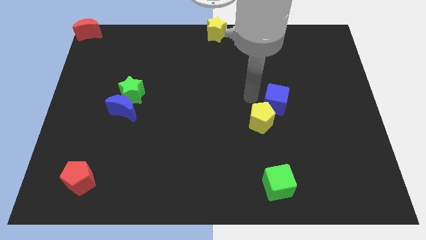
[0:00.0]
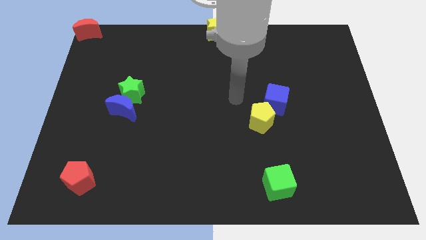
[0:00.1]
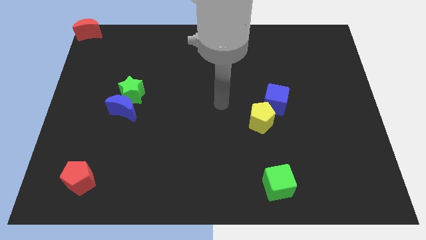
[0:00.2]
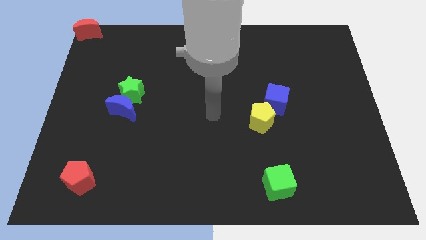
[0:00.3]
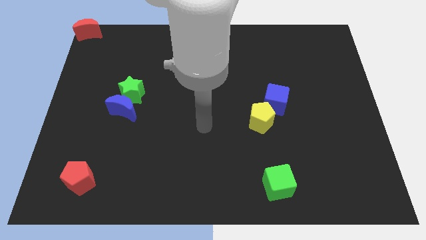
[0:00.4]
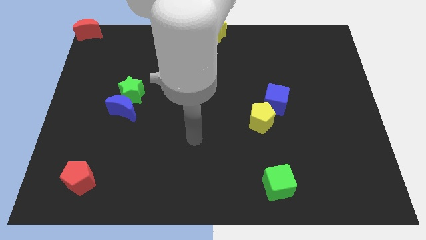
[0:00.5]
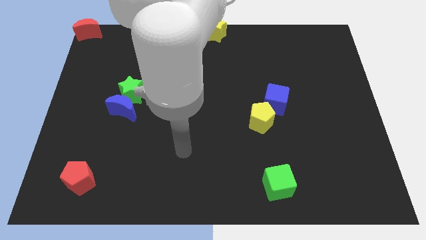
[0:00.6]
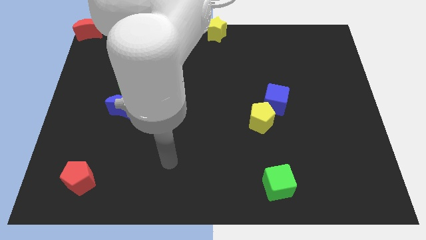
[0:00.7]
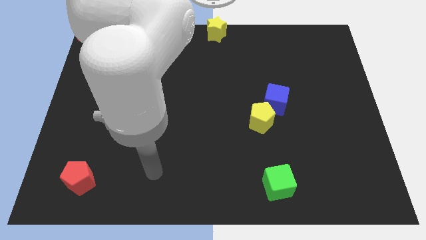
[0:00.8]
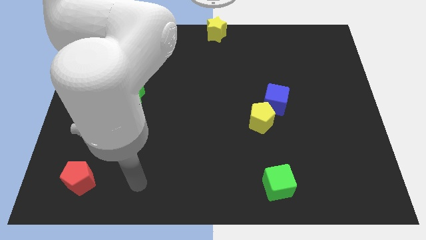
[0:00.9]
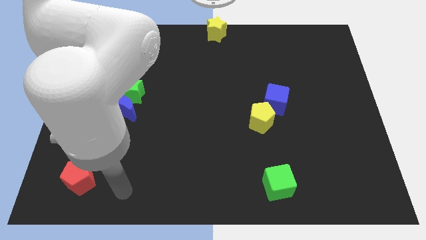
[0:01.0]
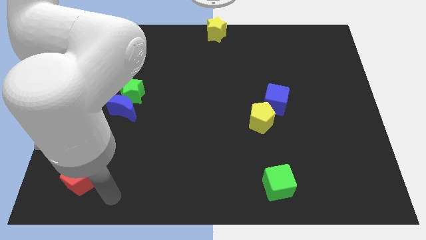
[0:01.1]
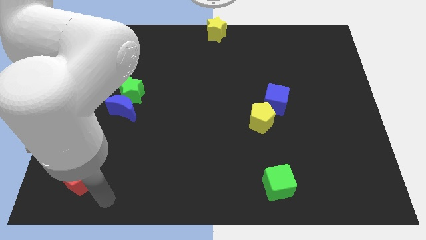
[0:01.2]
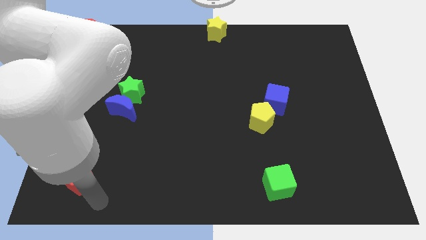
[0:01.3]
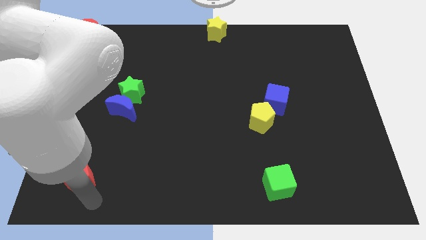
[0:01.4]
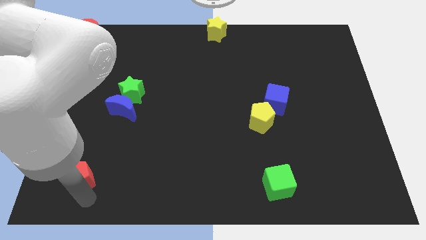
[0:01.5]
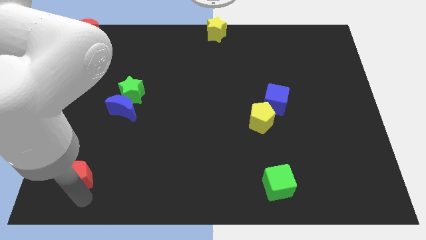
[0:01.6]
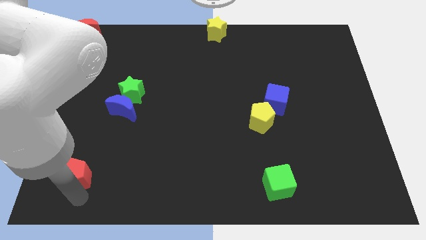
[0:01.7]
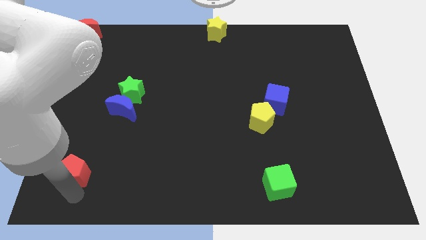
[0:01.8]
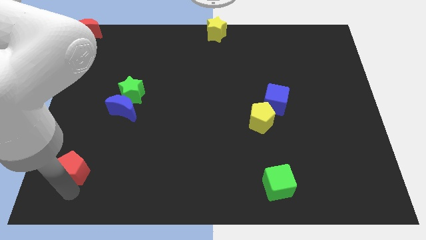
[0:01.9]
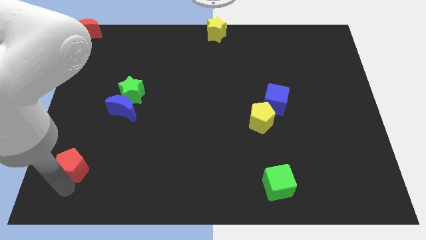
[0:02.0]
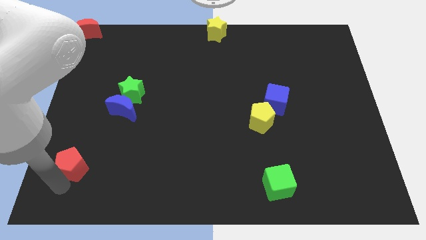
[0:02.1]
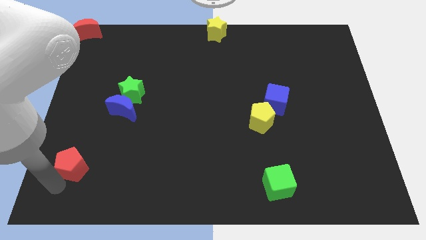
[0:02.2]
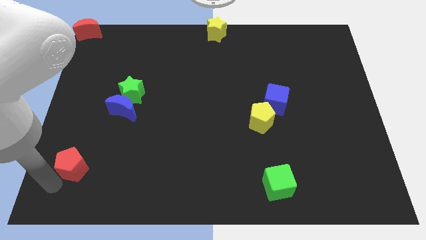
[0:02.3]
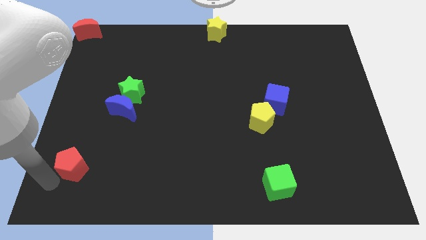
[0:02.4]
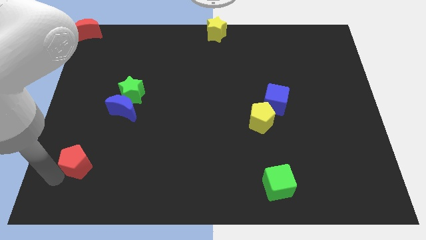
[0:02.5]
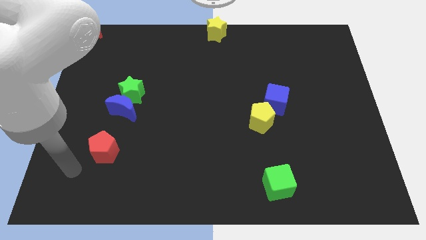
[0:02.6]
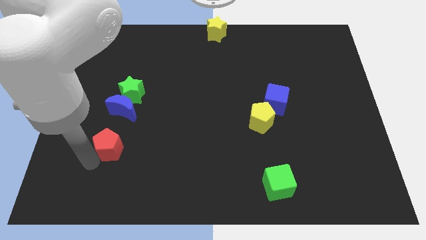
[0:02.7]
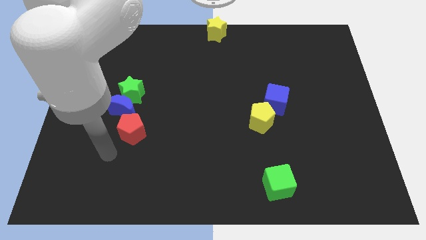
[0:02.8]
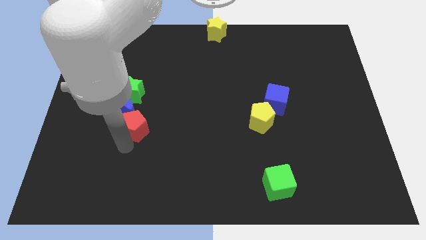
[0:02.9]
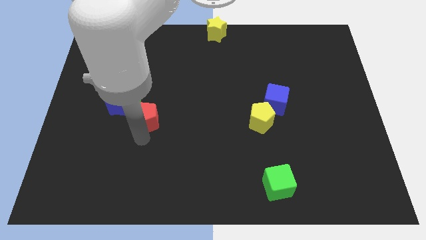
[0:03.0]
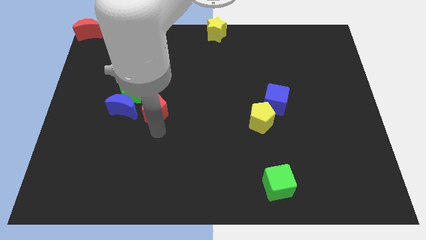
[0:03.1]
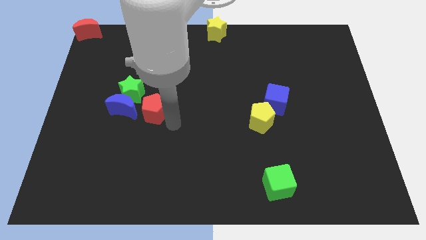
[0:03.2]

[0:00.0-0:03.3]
push the red pentagon to the right of the blue crescent

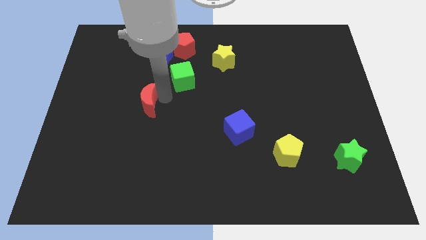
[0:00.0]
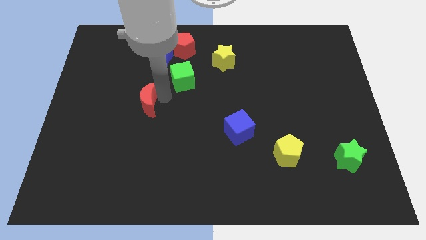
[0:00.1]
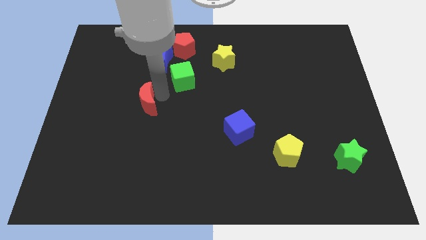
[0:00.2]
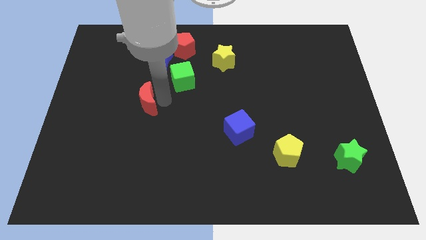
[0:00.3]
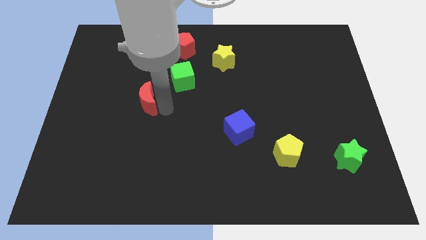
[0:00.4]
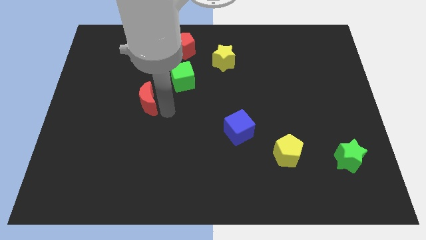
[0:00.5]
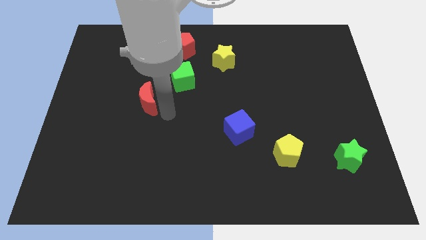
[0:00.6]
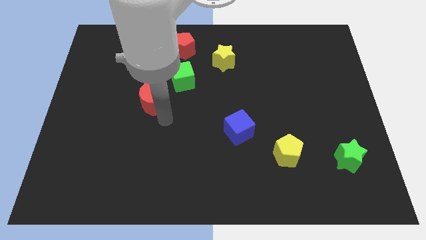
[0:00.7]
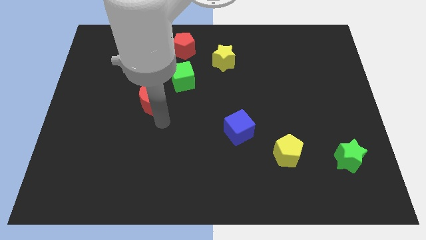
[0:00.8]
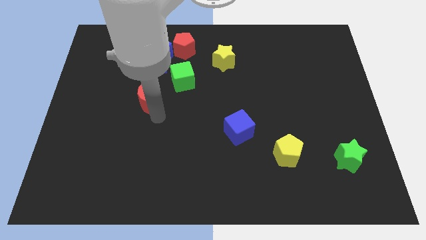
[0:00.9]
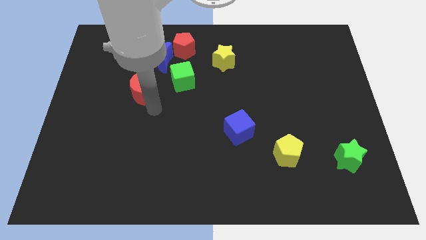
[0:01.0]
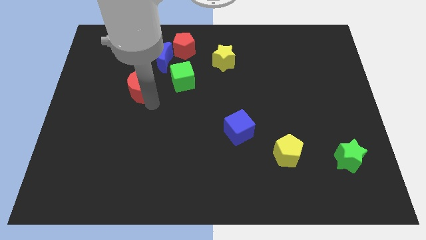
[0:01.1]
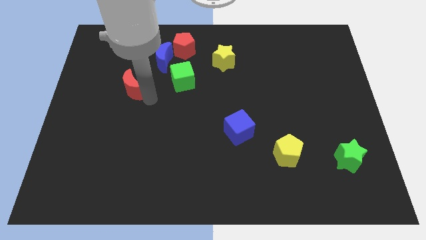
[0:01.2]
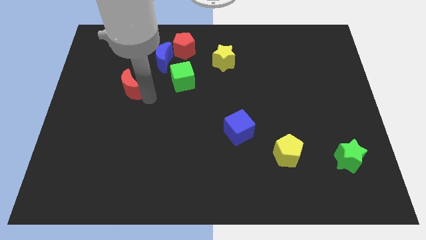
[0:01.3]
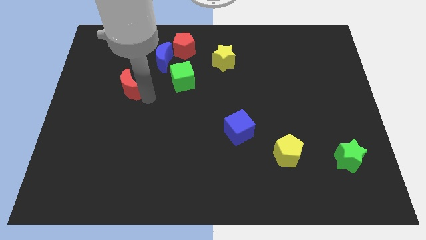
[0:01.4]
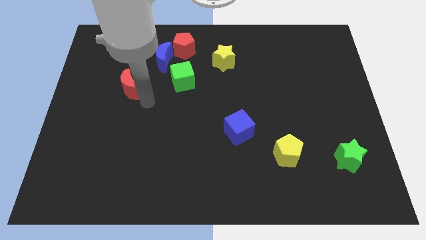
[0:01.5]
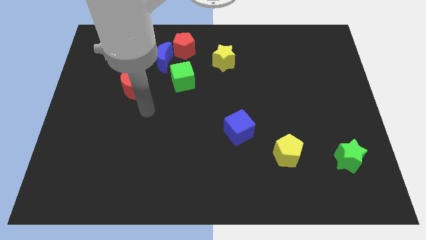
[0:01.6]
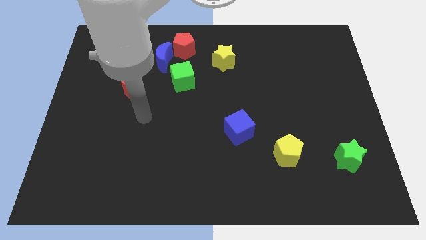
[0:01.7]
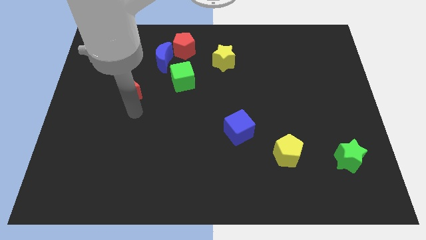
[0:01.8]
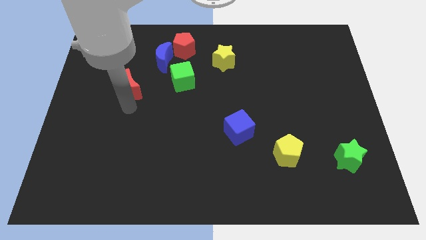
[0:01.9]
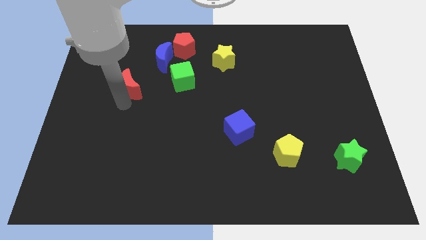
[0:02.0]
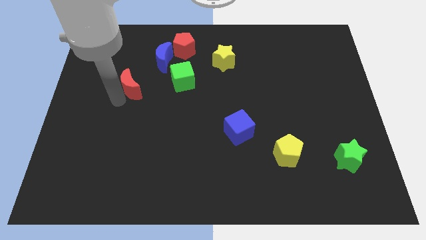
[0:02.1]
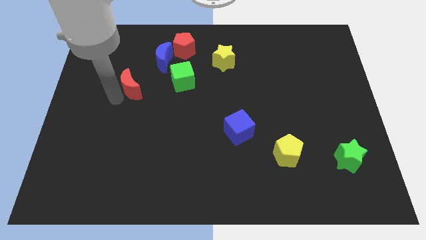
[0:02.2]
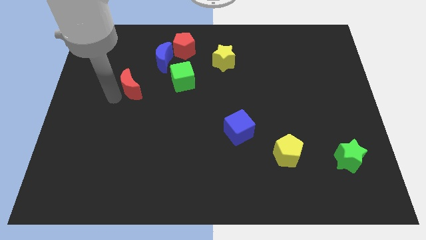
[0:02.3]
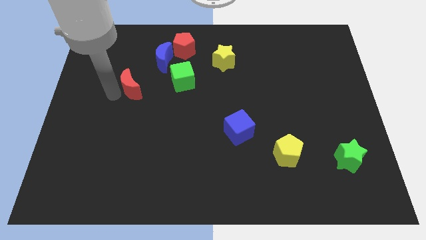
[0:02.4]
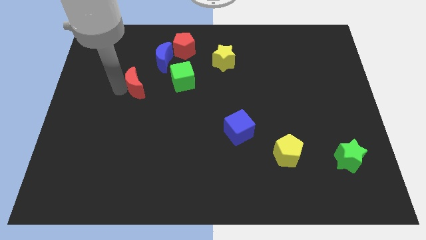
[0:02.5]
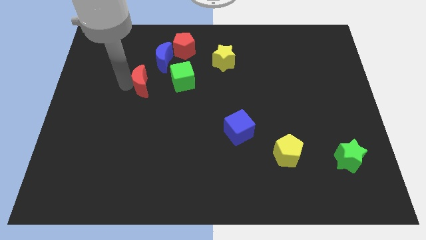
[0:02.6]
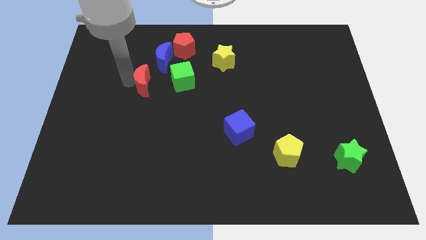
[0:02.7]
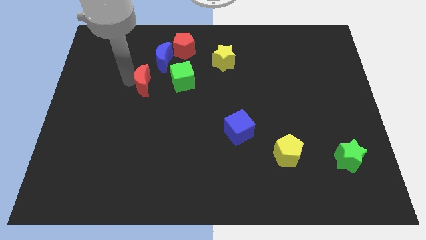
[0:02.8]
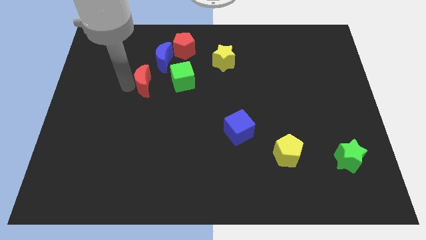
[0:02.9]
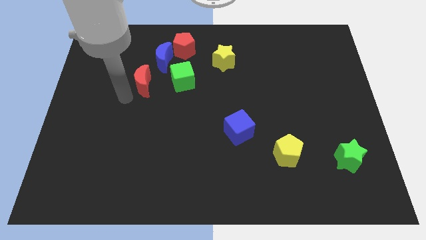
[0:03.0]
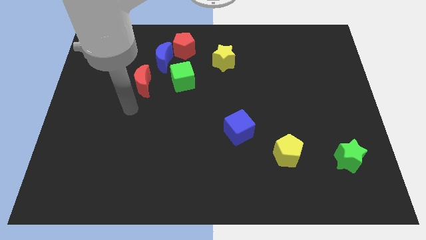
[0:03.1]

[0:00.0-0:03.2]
move the red crescent bottom left to the blue moon

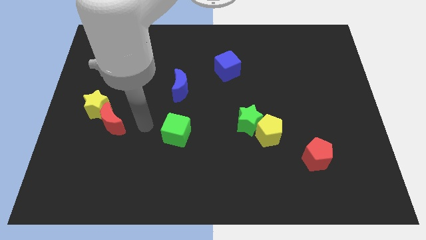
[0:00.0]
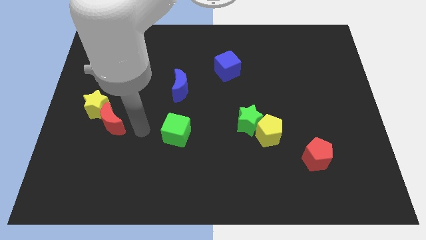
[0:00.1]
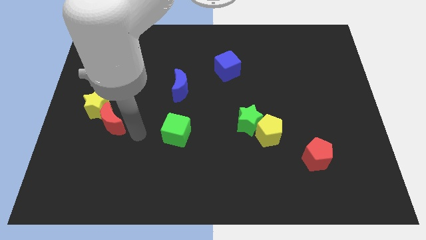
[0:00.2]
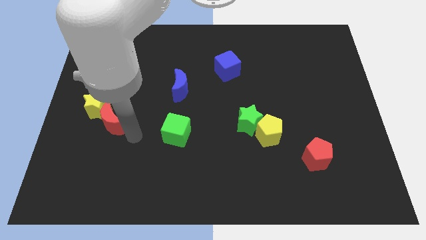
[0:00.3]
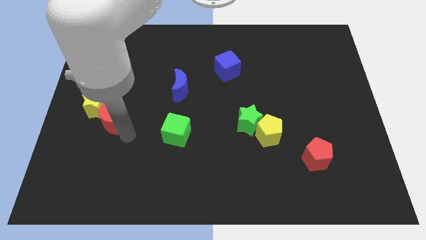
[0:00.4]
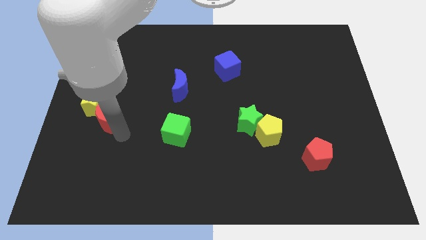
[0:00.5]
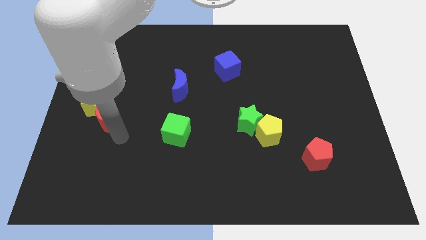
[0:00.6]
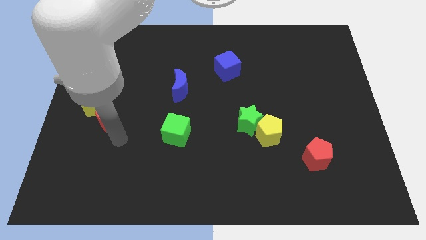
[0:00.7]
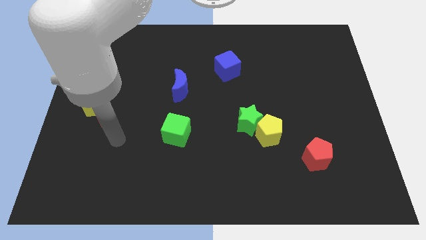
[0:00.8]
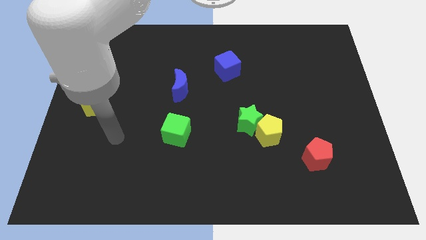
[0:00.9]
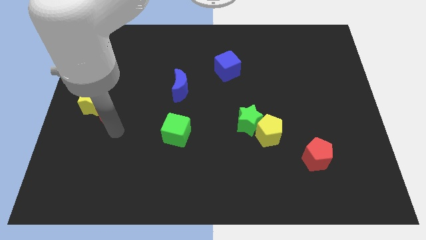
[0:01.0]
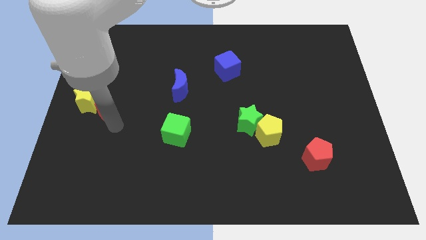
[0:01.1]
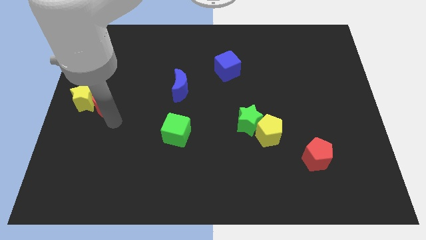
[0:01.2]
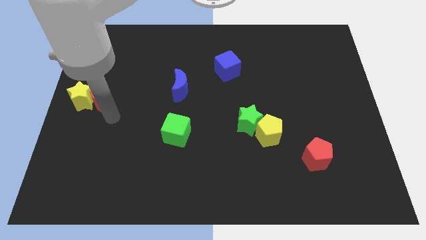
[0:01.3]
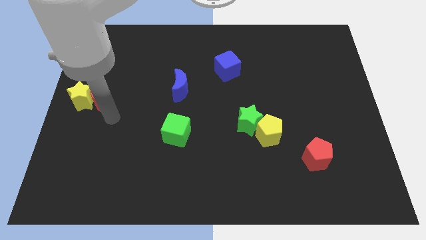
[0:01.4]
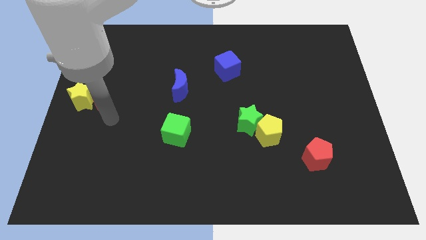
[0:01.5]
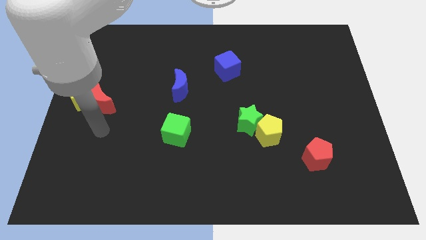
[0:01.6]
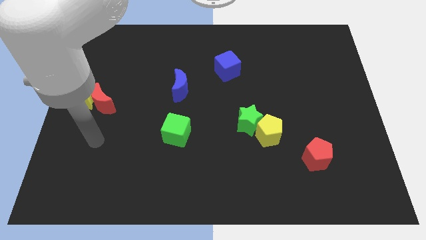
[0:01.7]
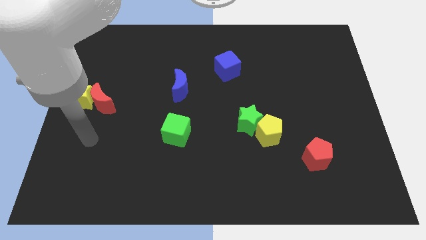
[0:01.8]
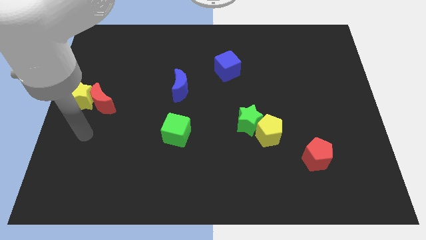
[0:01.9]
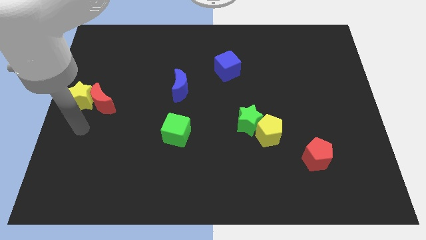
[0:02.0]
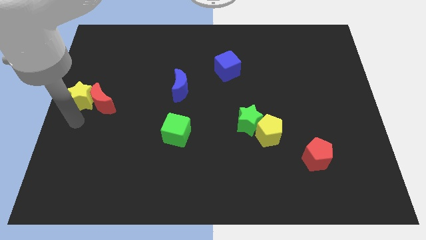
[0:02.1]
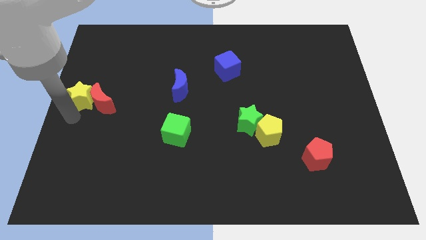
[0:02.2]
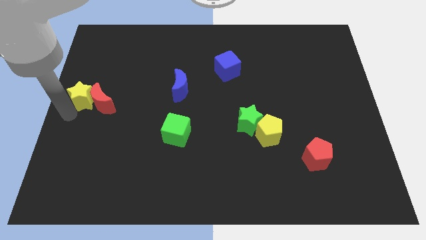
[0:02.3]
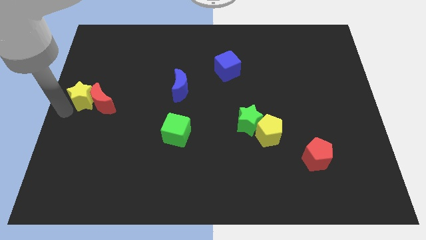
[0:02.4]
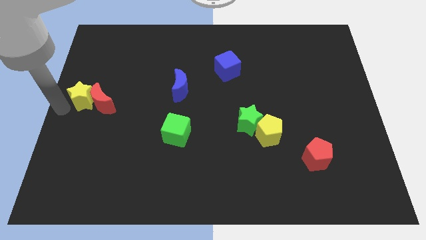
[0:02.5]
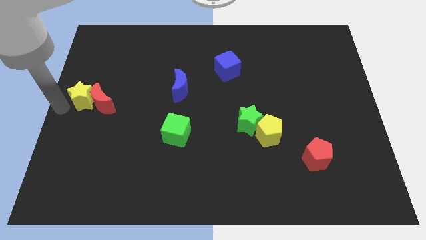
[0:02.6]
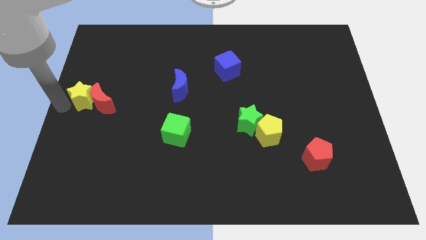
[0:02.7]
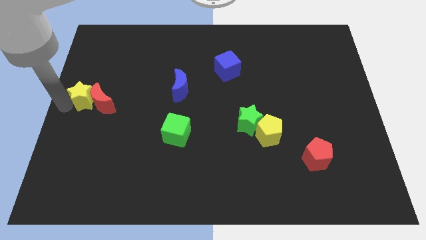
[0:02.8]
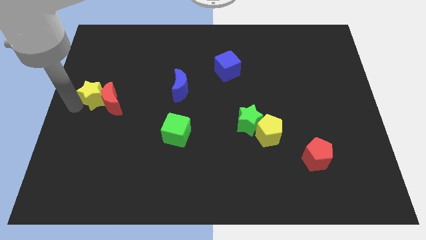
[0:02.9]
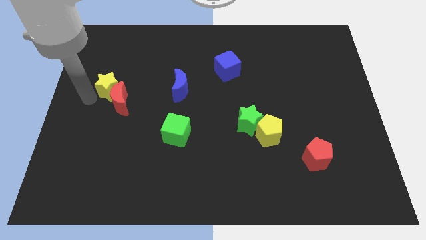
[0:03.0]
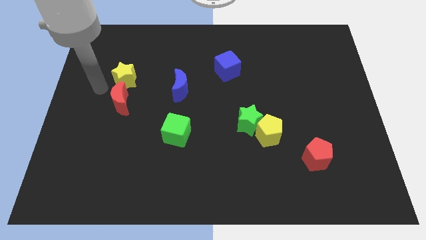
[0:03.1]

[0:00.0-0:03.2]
place the yellow star to the top side of the red crescent
